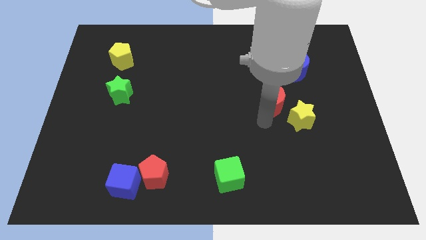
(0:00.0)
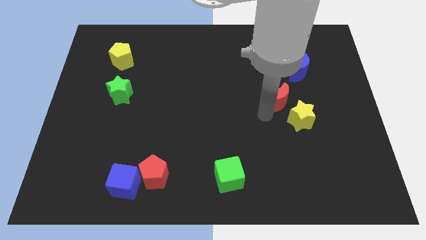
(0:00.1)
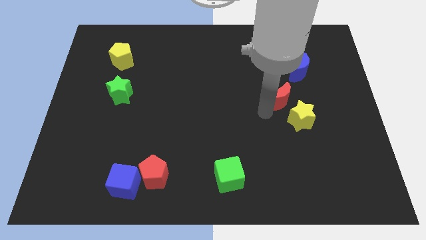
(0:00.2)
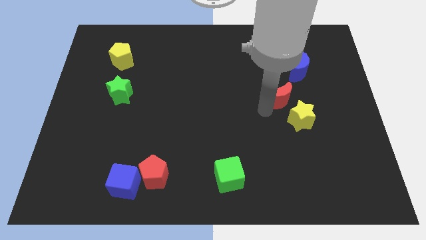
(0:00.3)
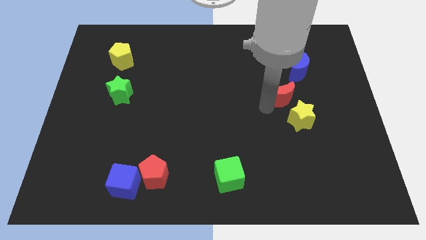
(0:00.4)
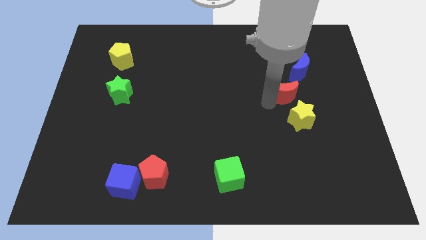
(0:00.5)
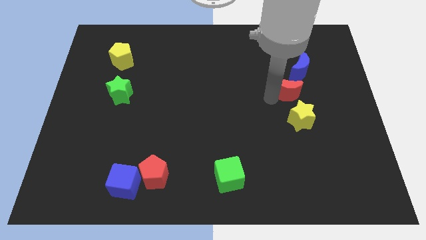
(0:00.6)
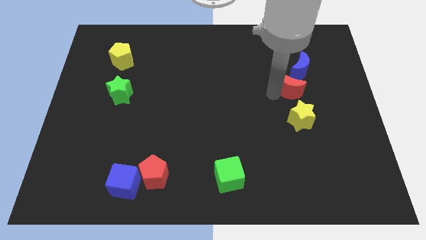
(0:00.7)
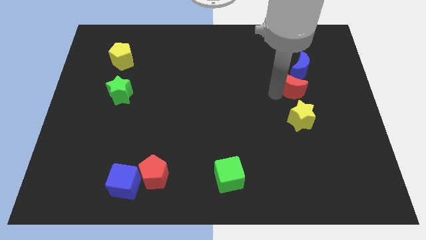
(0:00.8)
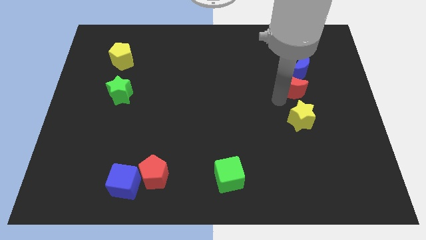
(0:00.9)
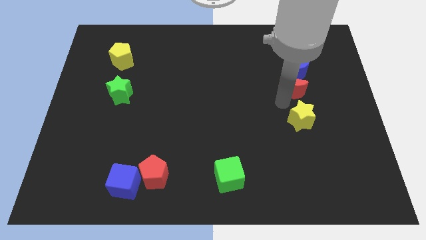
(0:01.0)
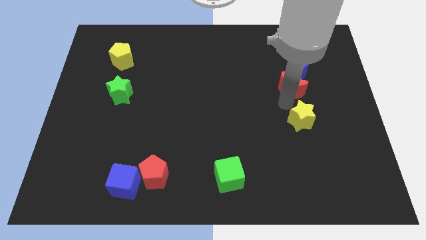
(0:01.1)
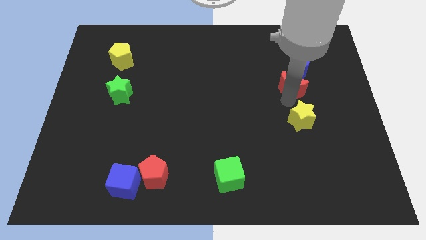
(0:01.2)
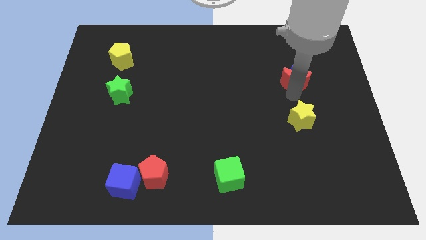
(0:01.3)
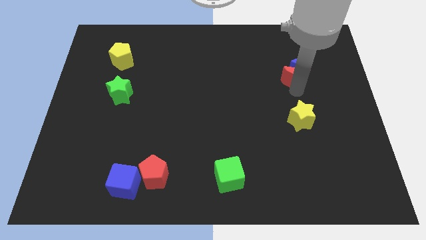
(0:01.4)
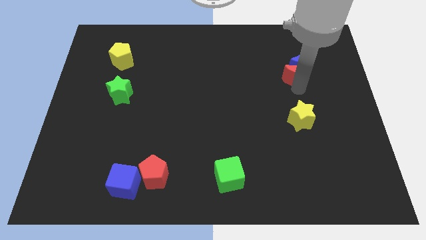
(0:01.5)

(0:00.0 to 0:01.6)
push the red moon into the blue moon

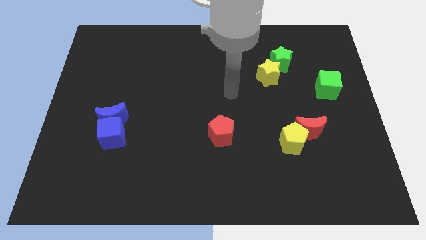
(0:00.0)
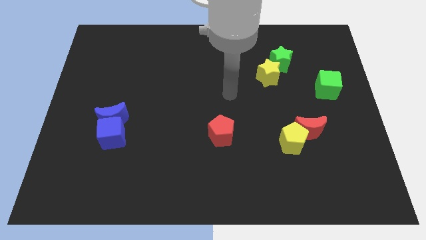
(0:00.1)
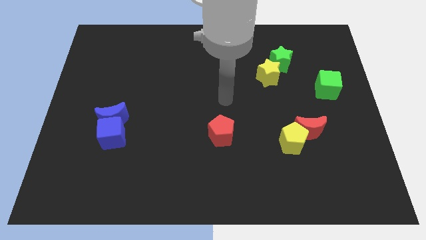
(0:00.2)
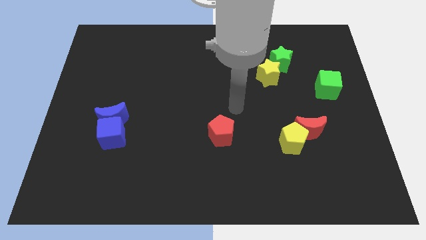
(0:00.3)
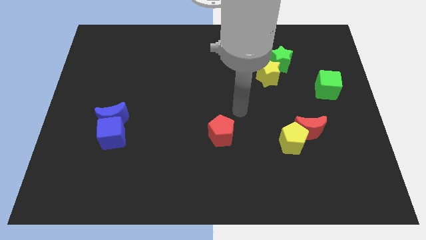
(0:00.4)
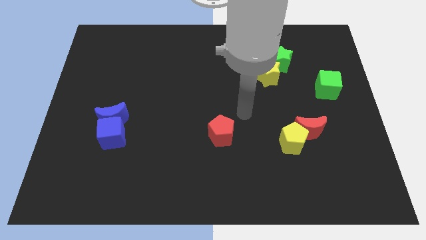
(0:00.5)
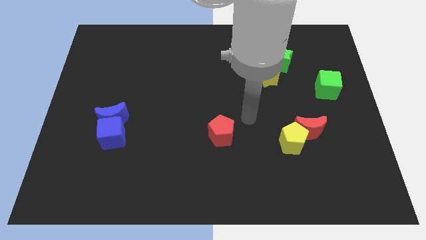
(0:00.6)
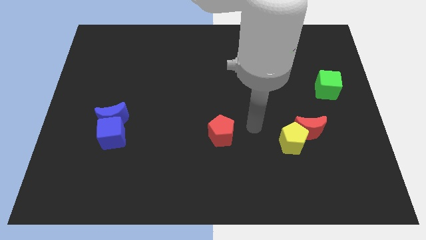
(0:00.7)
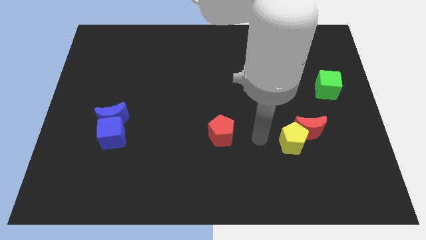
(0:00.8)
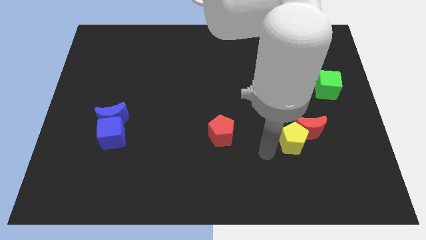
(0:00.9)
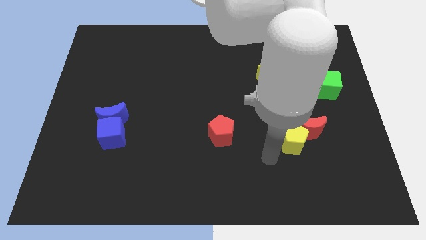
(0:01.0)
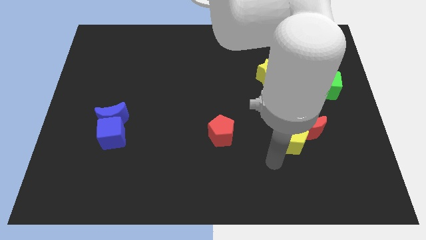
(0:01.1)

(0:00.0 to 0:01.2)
move your arm towards the yellow pentagon

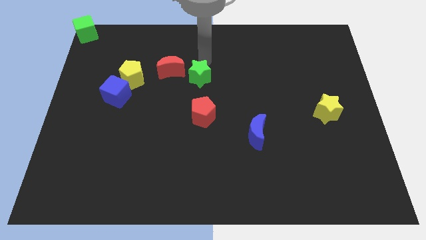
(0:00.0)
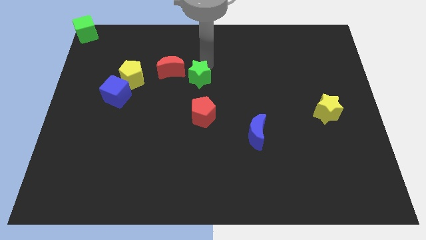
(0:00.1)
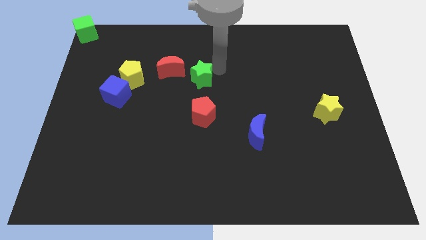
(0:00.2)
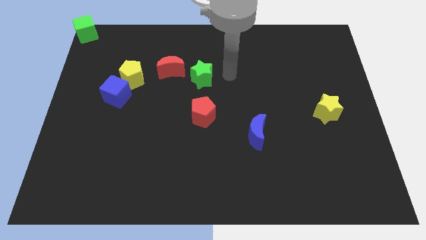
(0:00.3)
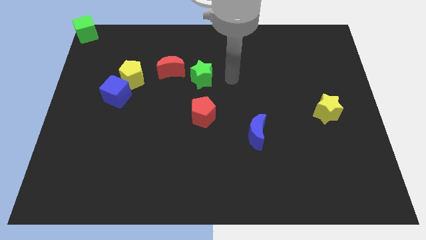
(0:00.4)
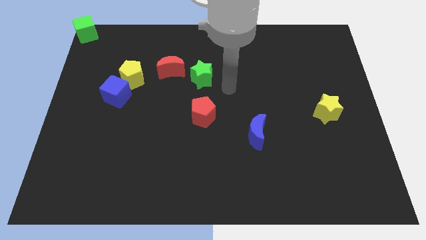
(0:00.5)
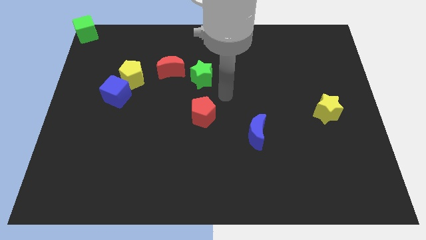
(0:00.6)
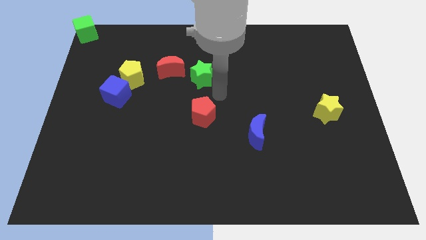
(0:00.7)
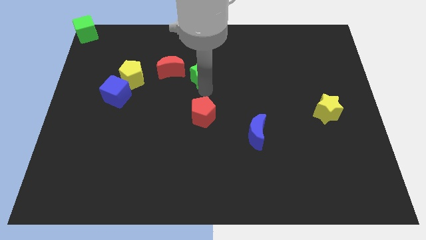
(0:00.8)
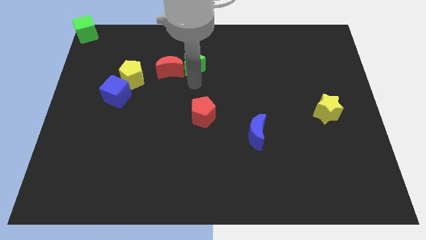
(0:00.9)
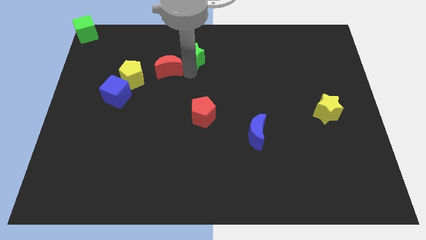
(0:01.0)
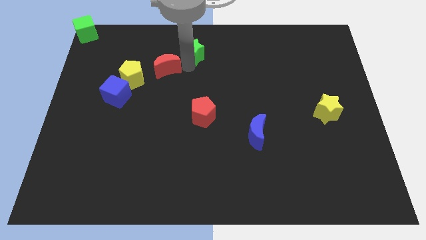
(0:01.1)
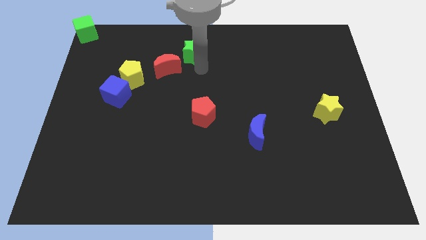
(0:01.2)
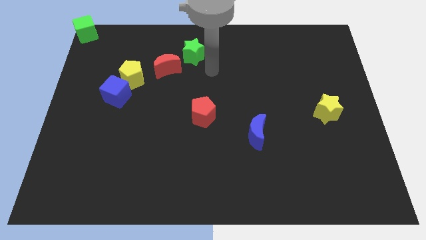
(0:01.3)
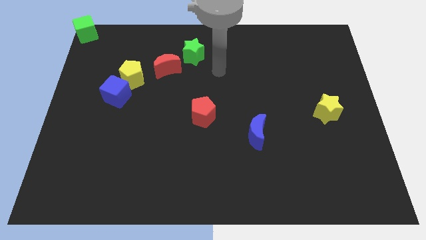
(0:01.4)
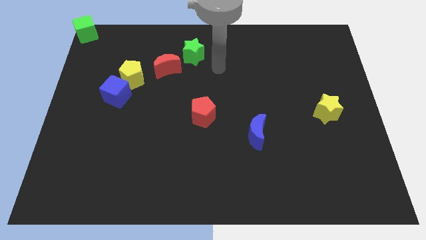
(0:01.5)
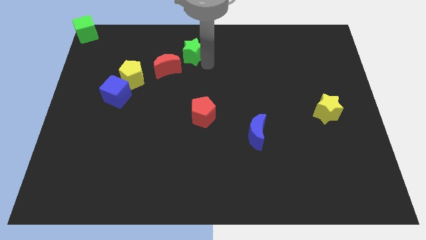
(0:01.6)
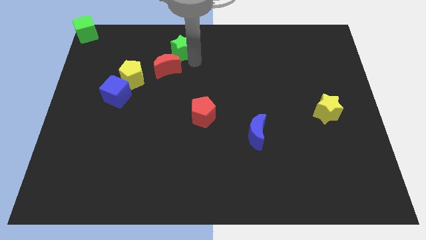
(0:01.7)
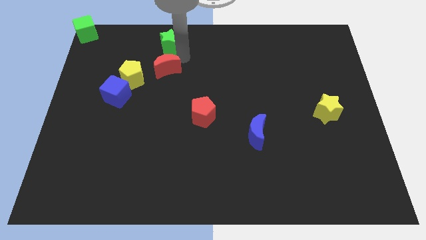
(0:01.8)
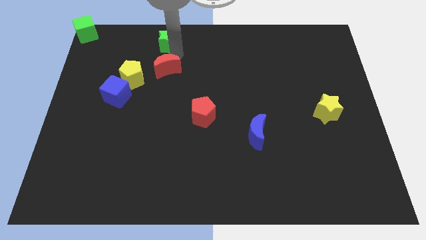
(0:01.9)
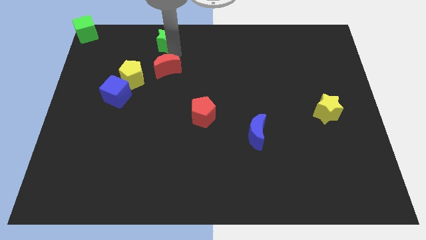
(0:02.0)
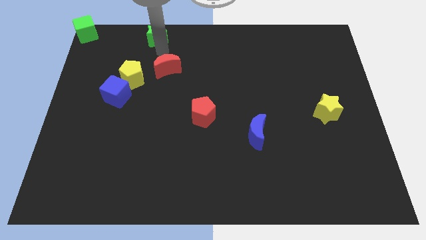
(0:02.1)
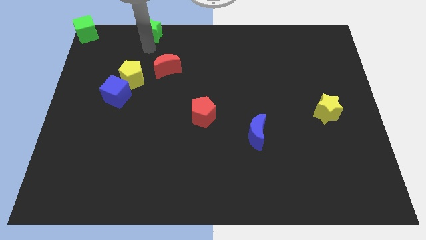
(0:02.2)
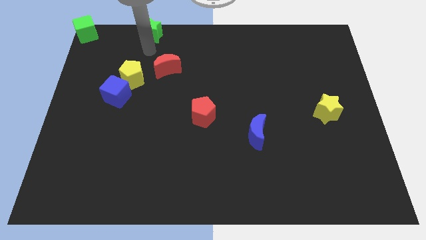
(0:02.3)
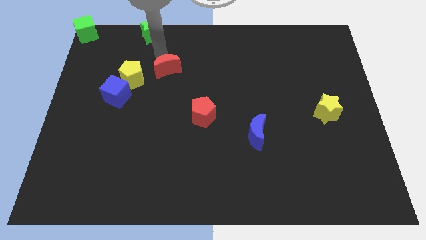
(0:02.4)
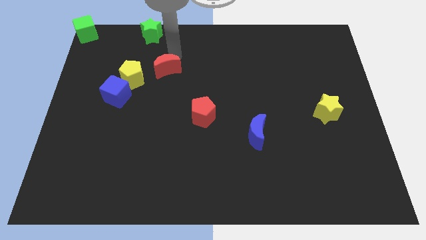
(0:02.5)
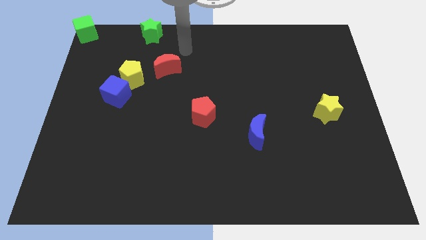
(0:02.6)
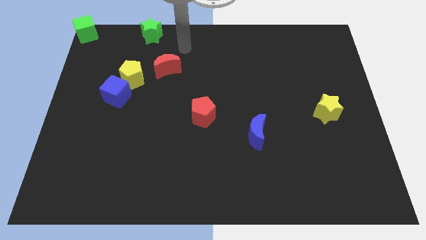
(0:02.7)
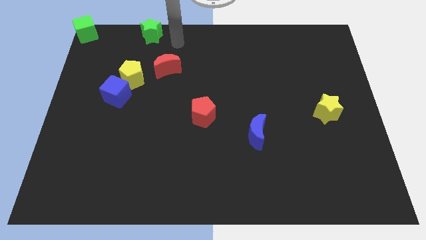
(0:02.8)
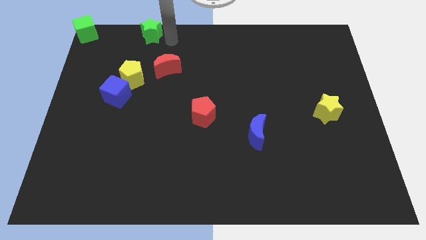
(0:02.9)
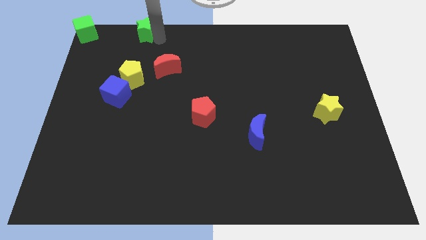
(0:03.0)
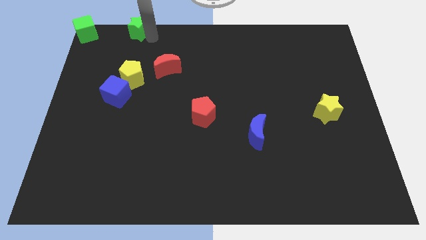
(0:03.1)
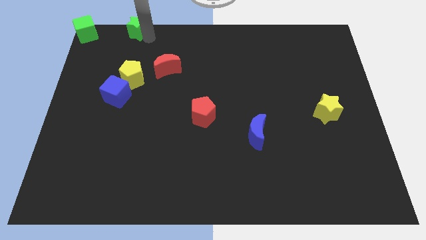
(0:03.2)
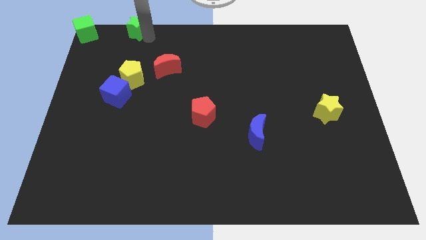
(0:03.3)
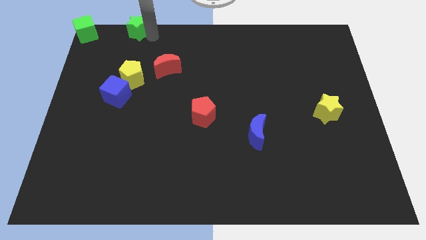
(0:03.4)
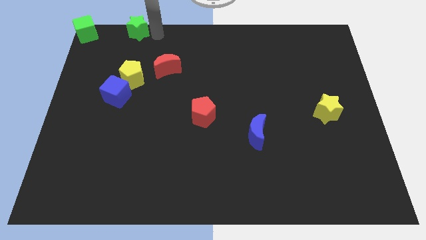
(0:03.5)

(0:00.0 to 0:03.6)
slide the green star vertically to the top side of the yellow pentagon

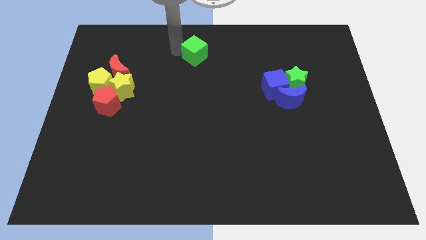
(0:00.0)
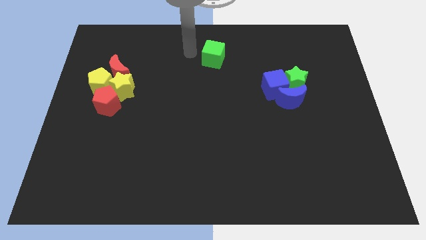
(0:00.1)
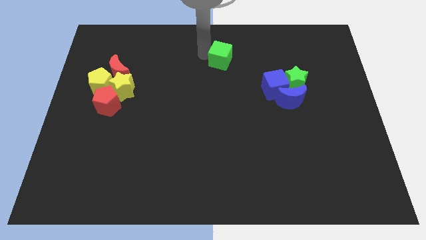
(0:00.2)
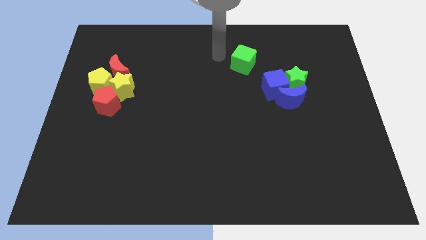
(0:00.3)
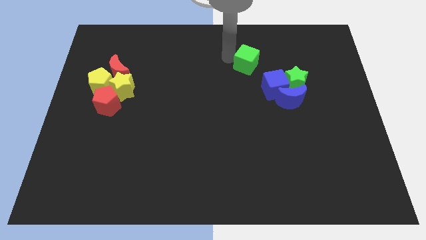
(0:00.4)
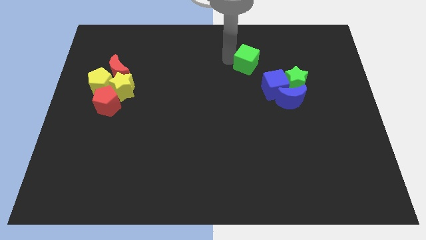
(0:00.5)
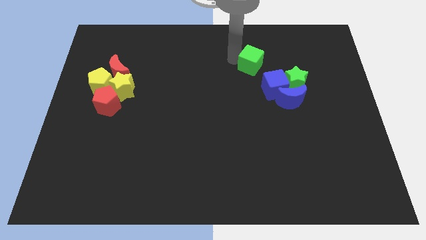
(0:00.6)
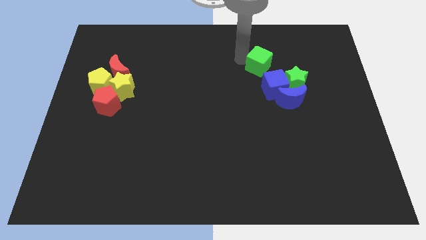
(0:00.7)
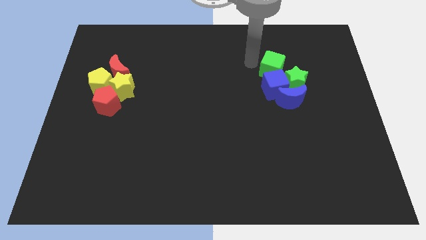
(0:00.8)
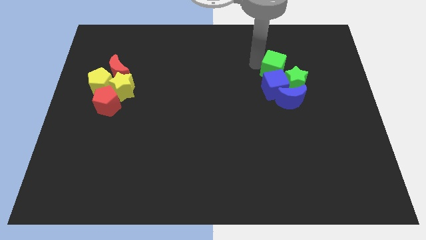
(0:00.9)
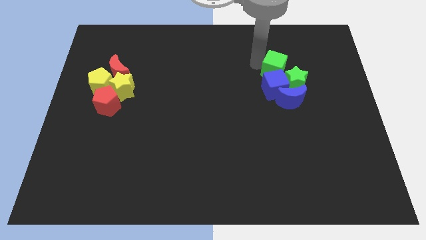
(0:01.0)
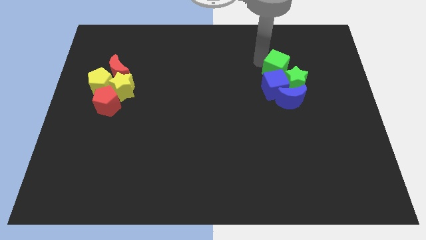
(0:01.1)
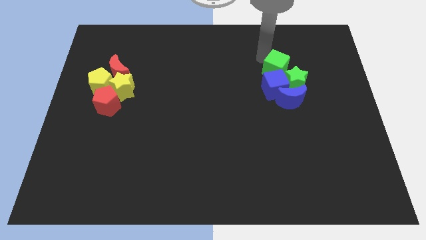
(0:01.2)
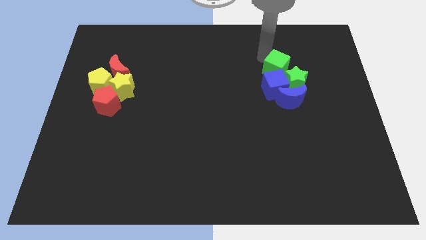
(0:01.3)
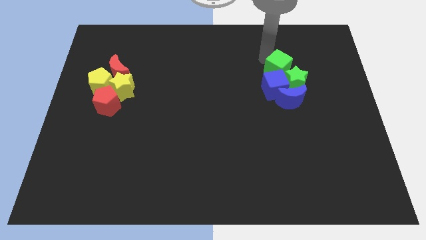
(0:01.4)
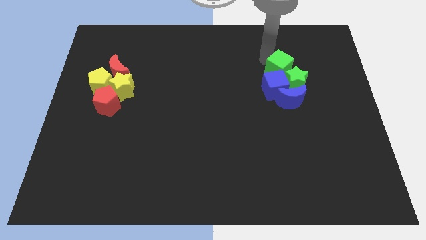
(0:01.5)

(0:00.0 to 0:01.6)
move the green cube close to the green star

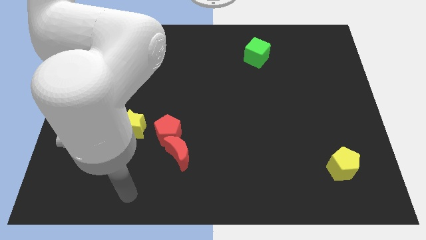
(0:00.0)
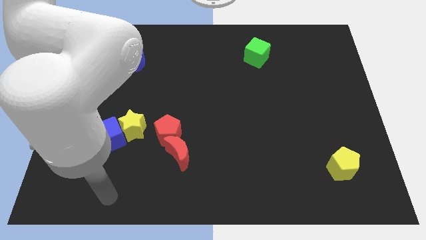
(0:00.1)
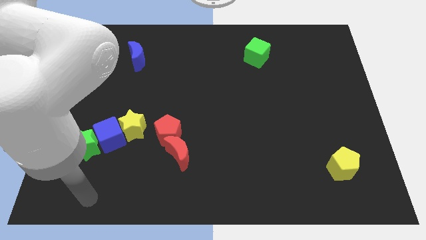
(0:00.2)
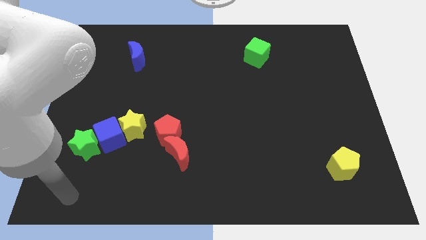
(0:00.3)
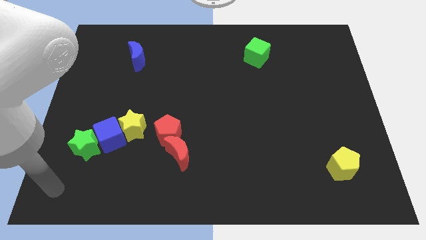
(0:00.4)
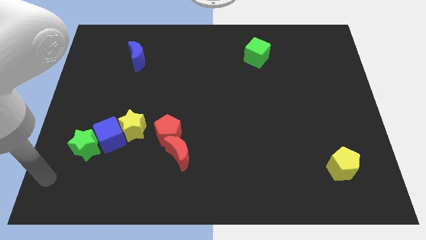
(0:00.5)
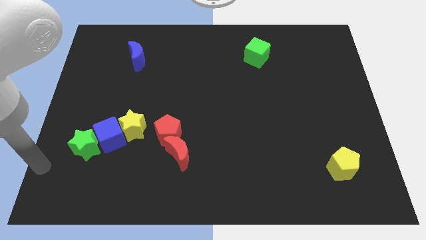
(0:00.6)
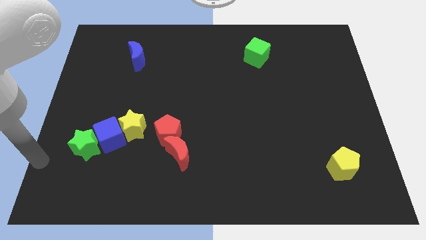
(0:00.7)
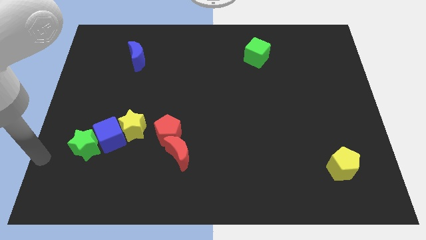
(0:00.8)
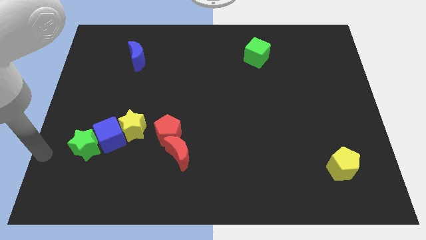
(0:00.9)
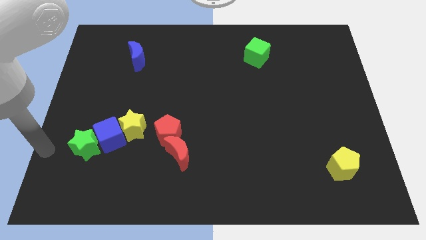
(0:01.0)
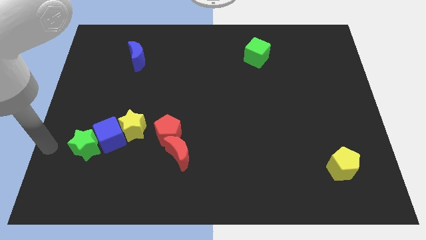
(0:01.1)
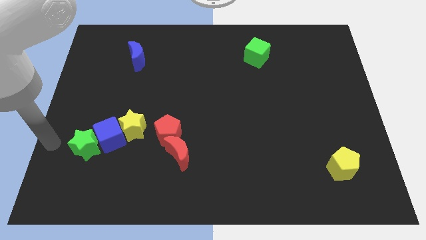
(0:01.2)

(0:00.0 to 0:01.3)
move your hand at the left side of the green star
